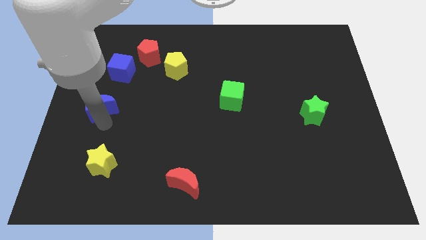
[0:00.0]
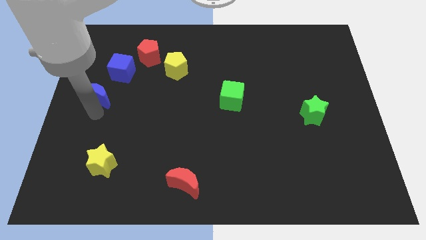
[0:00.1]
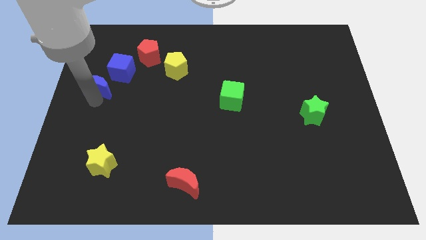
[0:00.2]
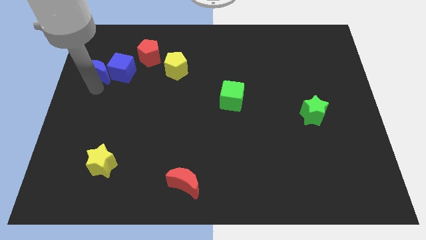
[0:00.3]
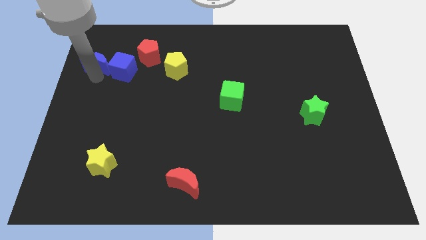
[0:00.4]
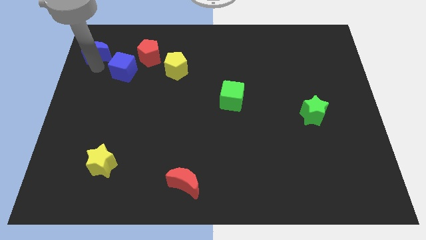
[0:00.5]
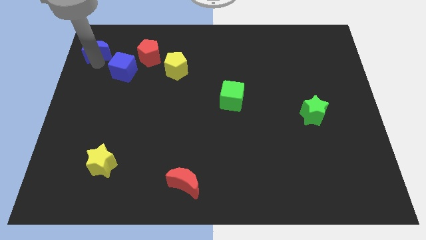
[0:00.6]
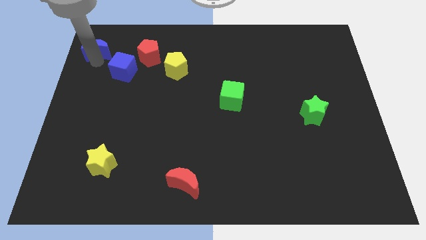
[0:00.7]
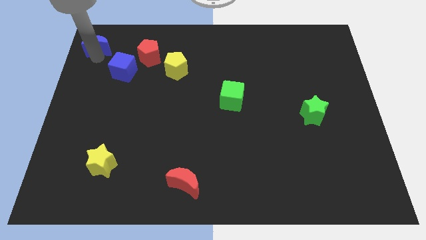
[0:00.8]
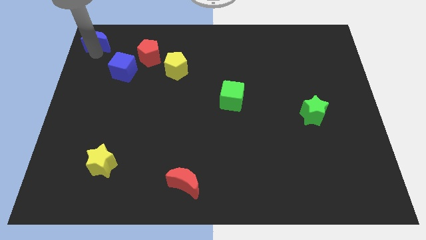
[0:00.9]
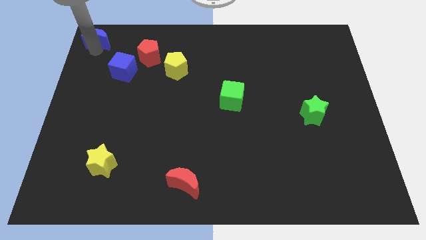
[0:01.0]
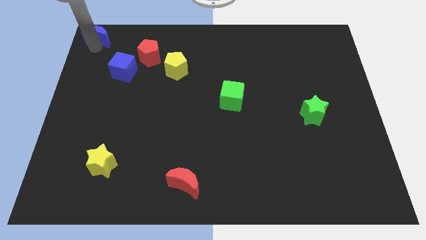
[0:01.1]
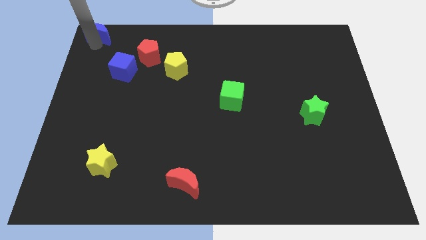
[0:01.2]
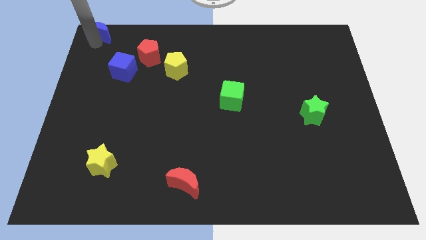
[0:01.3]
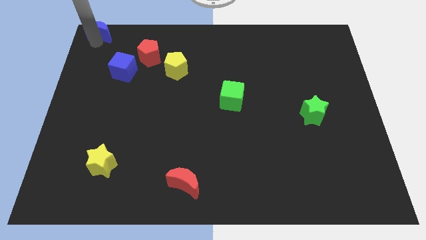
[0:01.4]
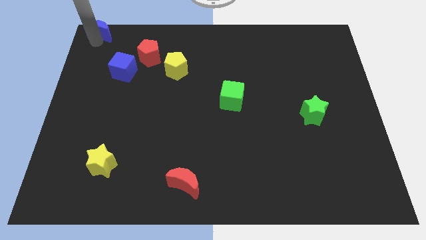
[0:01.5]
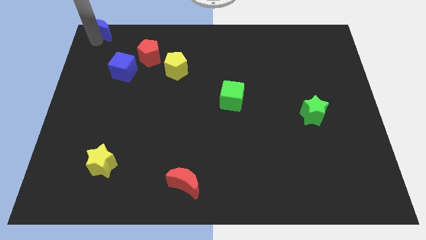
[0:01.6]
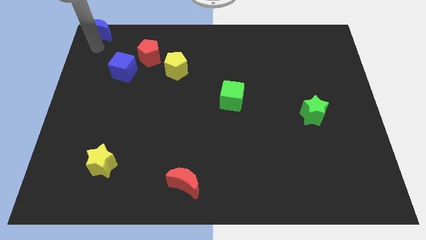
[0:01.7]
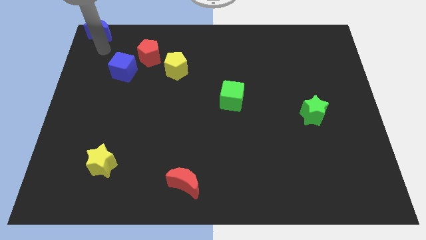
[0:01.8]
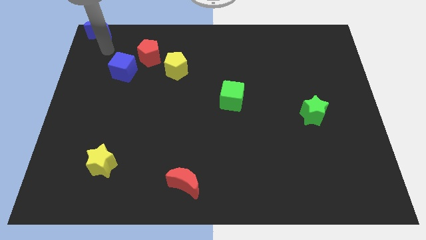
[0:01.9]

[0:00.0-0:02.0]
push the blue crescent towards the left top of the board

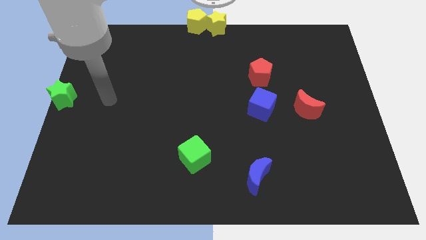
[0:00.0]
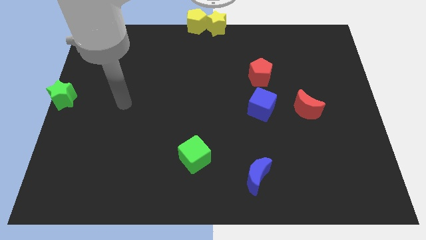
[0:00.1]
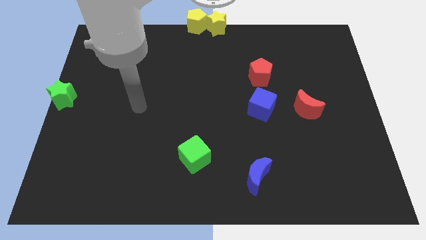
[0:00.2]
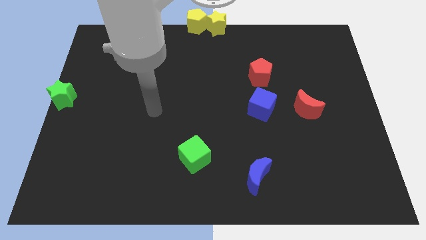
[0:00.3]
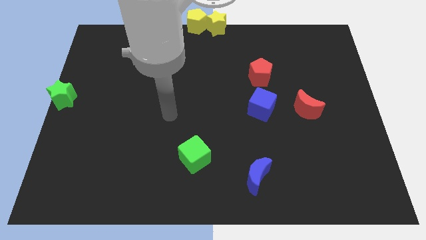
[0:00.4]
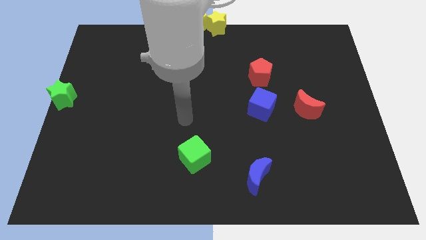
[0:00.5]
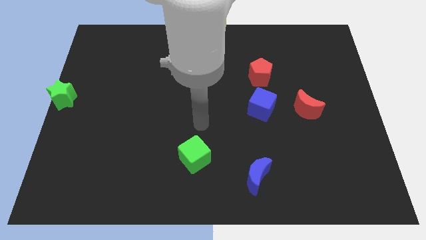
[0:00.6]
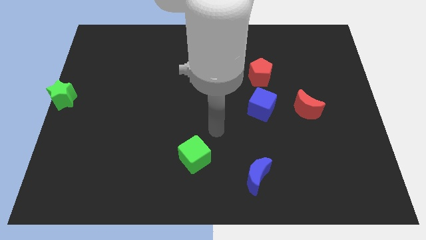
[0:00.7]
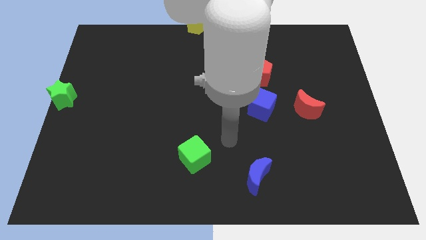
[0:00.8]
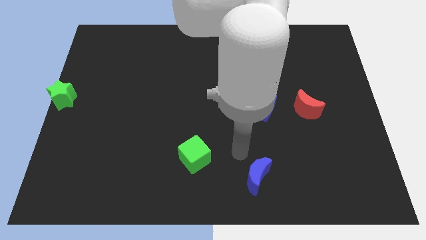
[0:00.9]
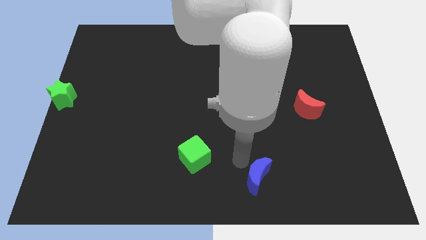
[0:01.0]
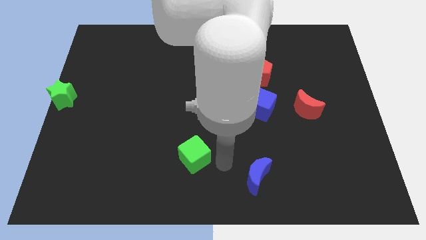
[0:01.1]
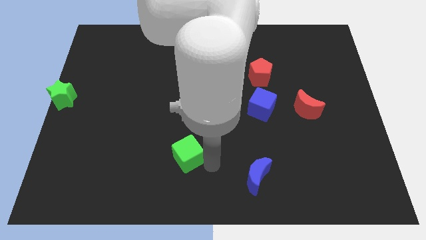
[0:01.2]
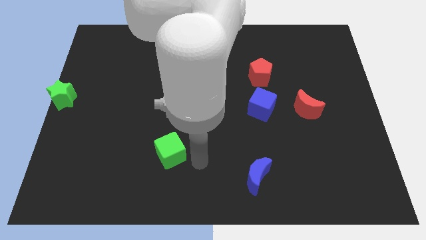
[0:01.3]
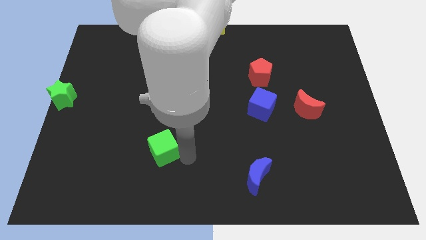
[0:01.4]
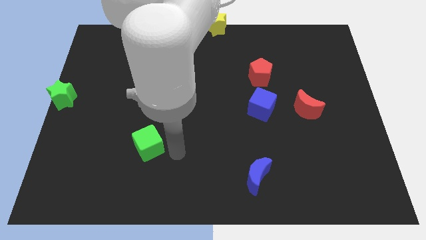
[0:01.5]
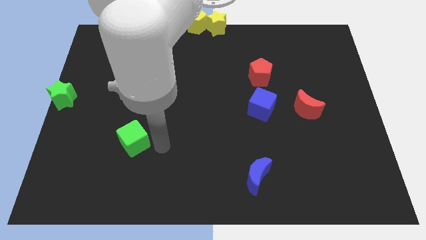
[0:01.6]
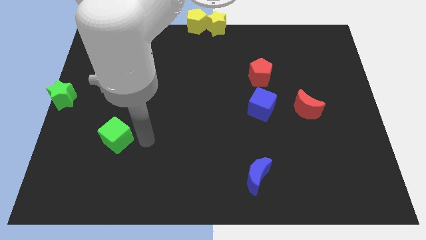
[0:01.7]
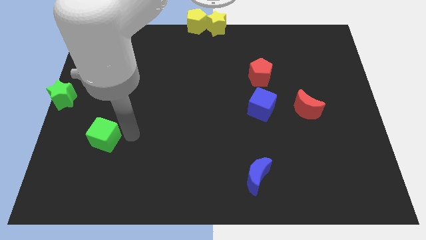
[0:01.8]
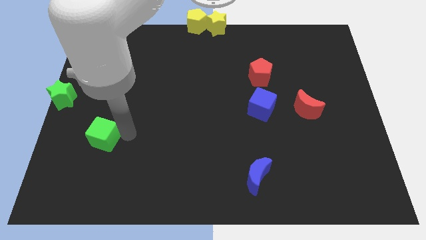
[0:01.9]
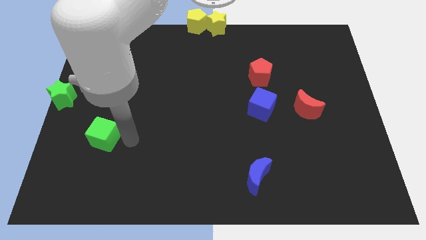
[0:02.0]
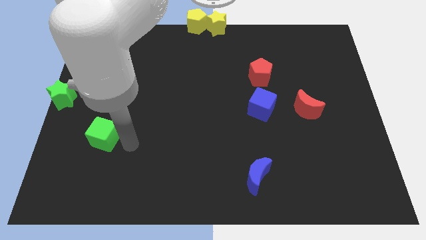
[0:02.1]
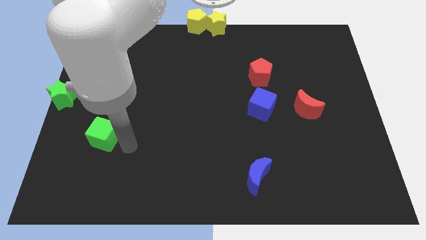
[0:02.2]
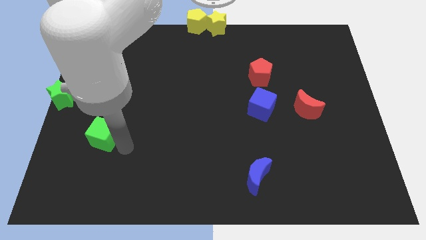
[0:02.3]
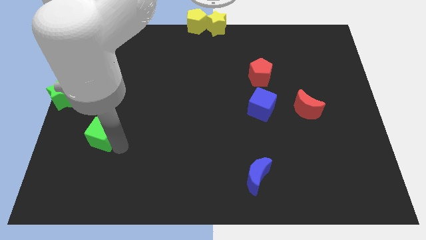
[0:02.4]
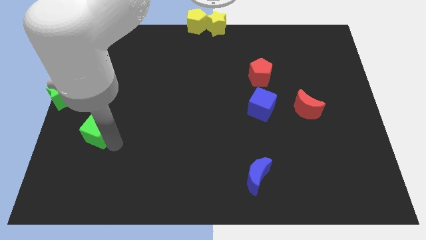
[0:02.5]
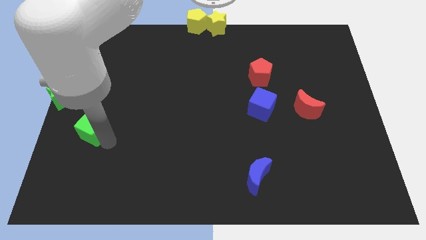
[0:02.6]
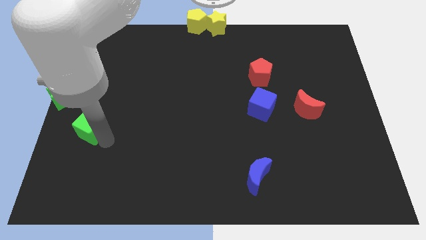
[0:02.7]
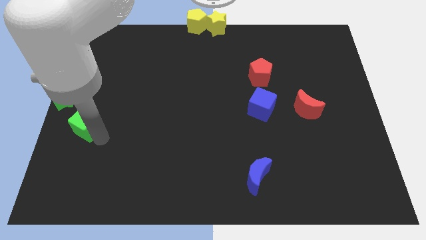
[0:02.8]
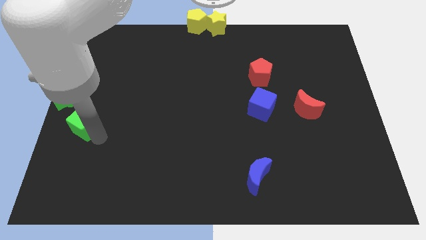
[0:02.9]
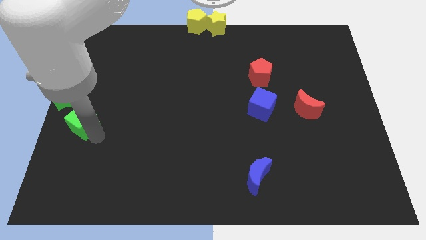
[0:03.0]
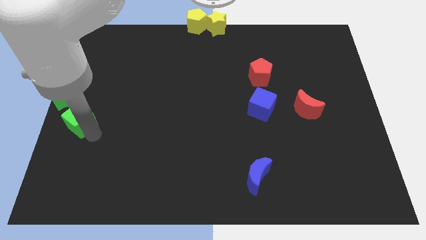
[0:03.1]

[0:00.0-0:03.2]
place the green cube to the bottom right of the green star

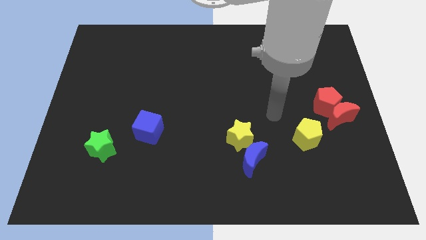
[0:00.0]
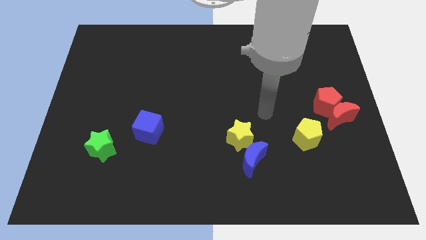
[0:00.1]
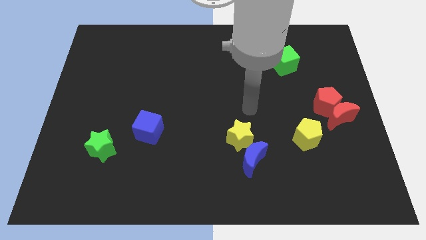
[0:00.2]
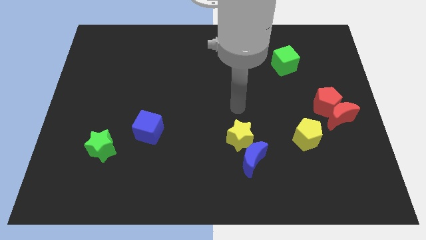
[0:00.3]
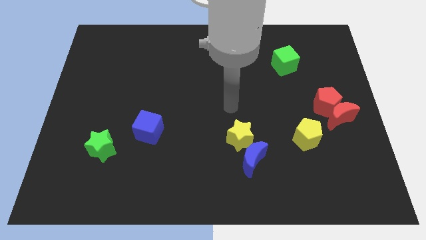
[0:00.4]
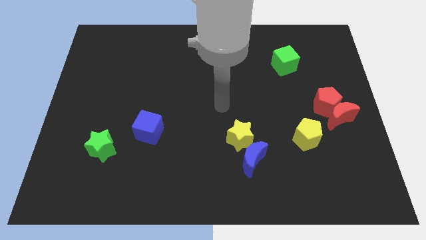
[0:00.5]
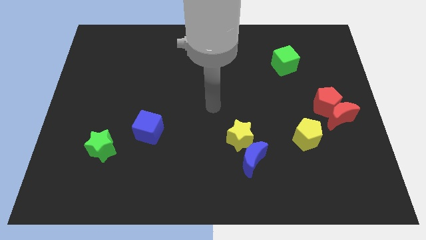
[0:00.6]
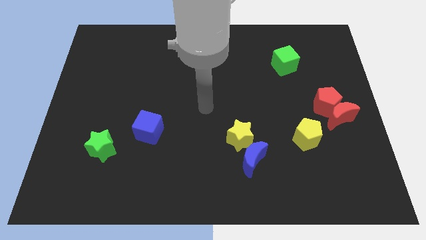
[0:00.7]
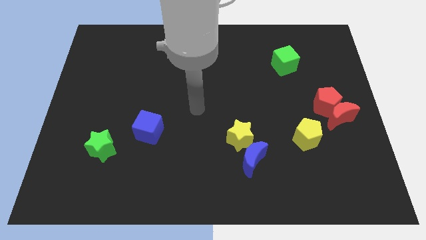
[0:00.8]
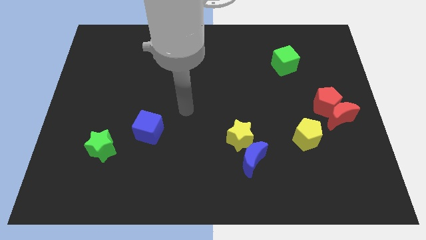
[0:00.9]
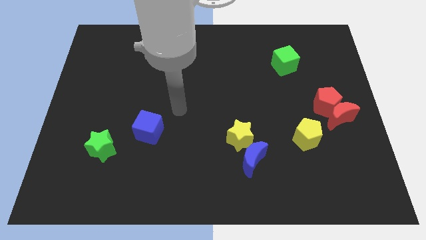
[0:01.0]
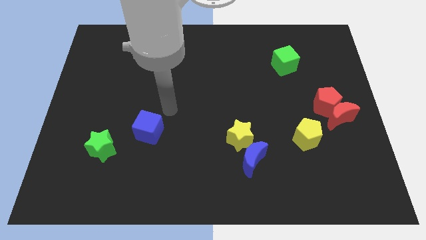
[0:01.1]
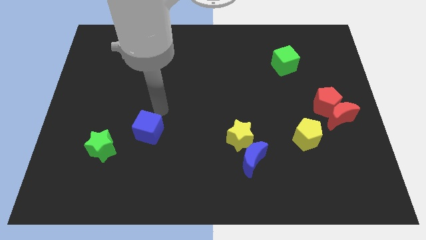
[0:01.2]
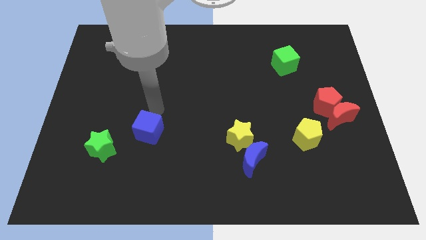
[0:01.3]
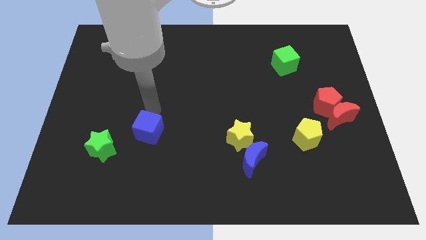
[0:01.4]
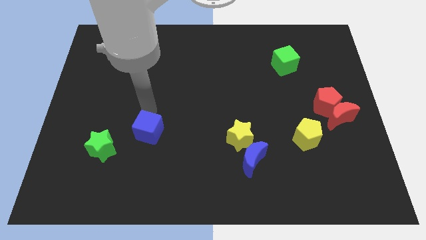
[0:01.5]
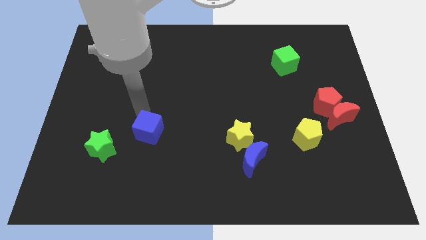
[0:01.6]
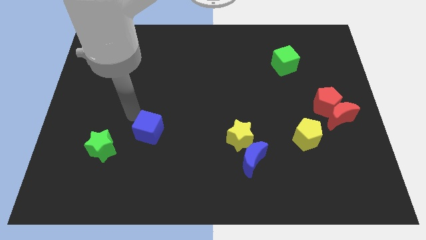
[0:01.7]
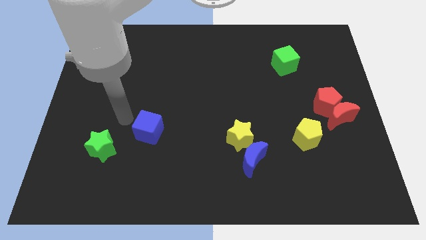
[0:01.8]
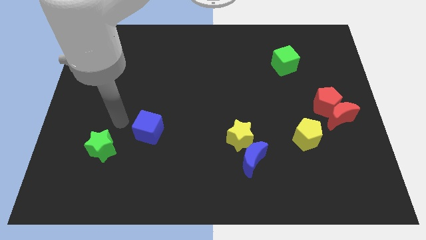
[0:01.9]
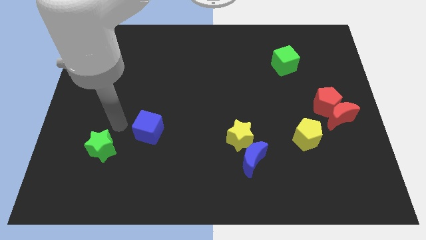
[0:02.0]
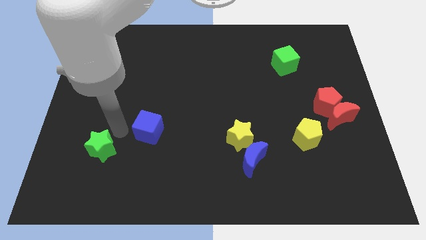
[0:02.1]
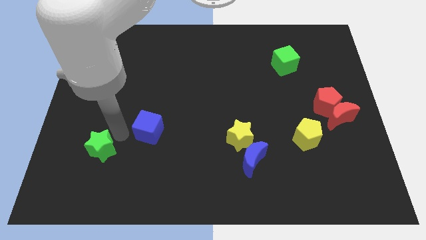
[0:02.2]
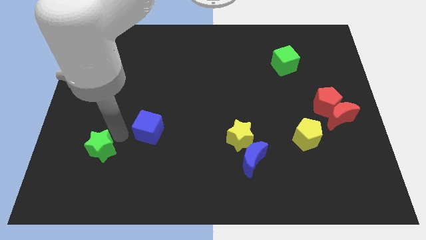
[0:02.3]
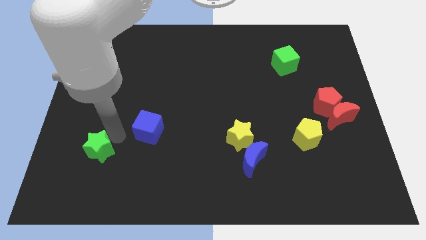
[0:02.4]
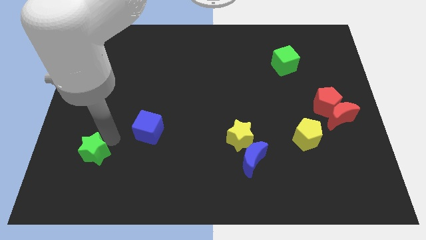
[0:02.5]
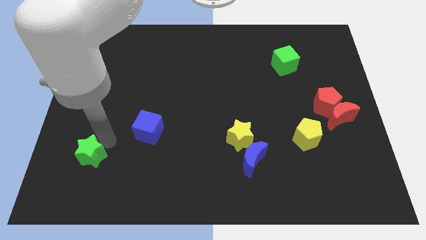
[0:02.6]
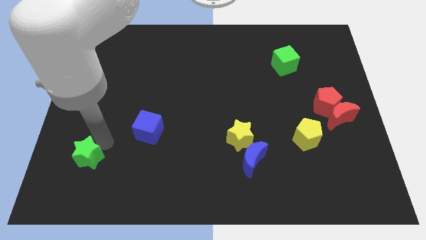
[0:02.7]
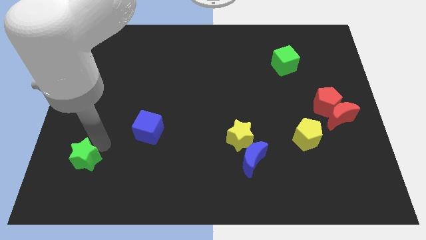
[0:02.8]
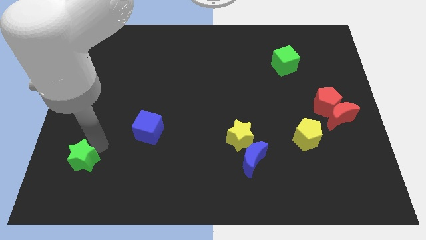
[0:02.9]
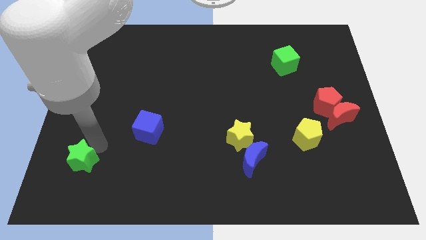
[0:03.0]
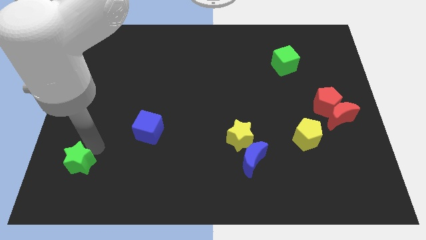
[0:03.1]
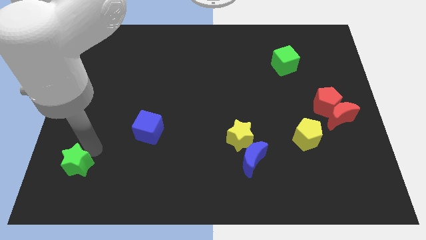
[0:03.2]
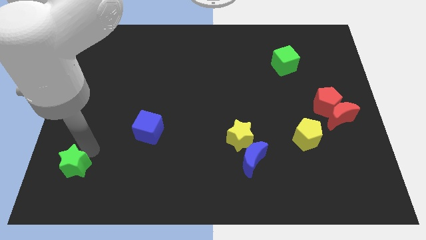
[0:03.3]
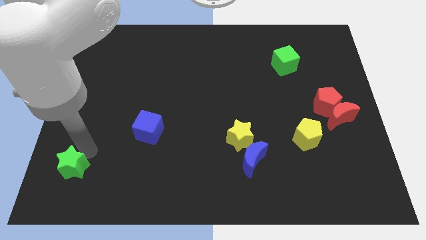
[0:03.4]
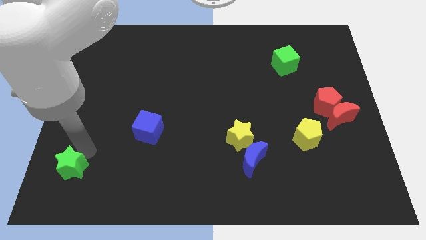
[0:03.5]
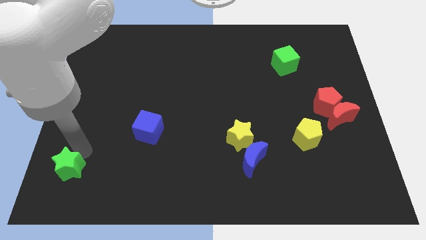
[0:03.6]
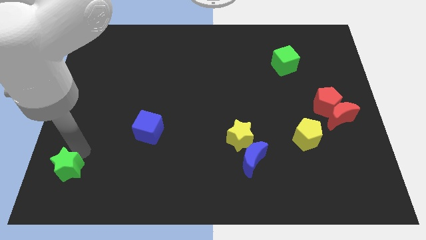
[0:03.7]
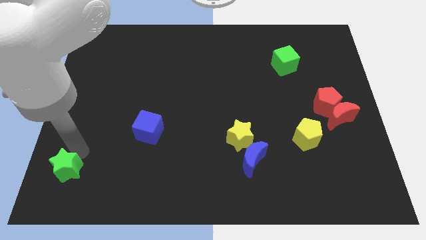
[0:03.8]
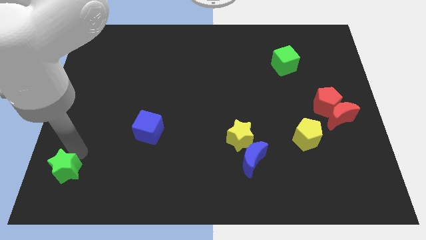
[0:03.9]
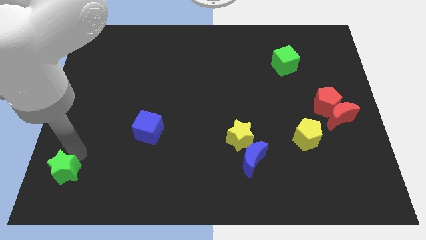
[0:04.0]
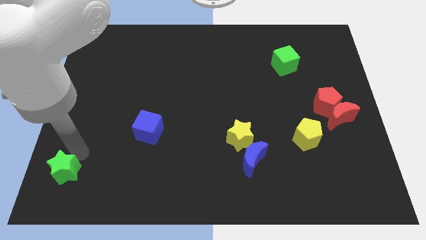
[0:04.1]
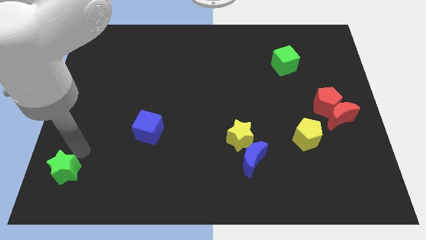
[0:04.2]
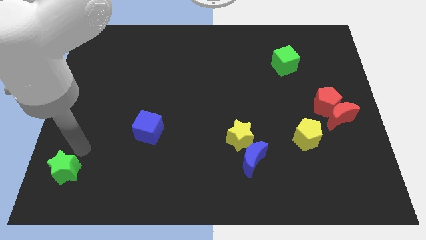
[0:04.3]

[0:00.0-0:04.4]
push the green star to the left bottom of the board
